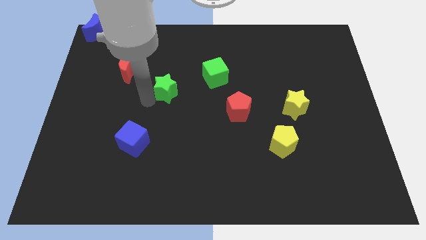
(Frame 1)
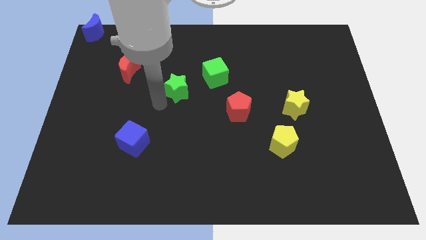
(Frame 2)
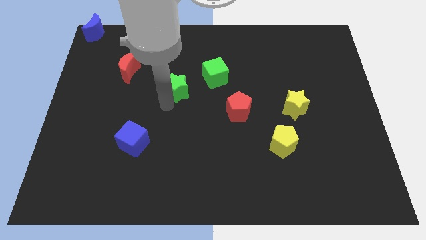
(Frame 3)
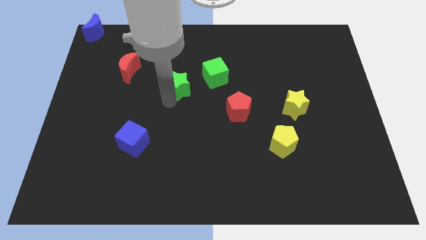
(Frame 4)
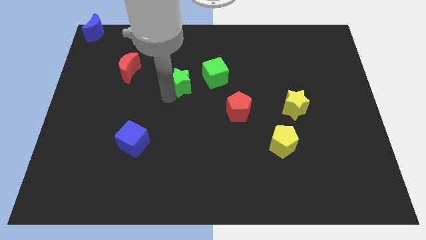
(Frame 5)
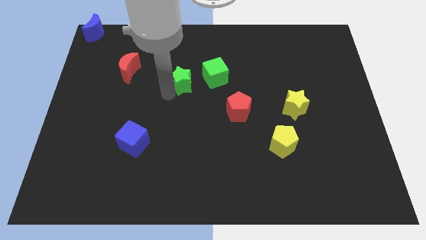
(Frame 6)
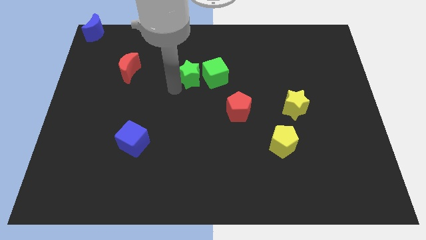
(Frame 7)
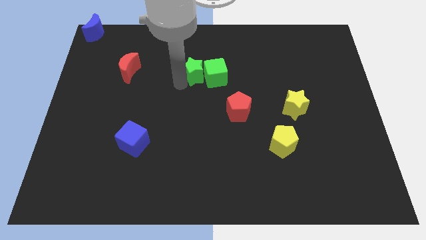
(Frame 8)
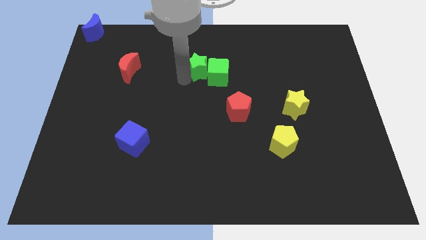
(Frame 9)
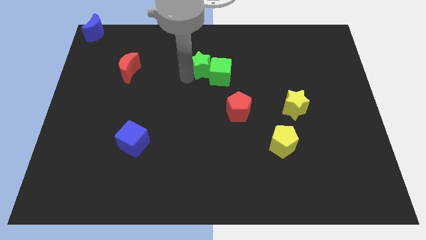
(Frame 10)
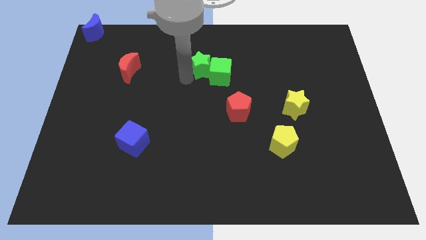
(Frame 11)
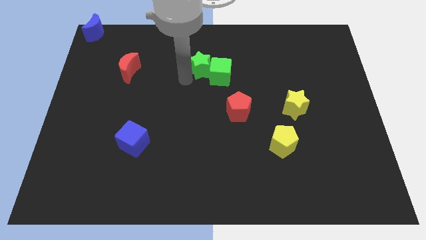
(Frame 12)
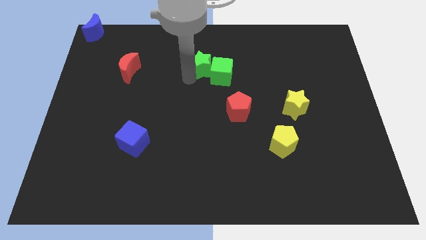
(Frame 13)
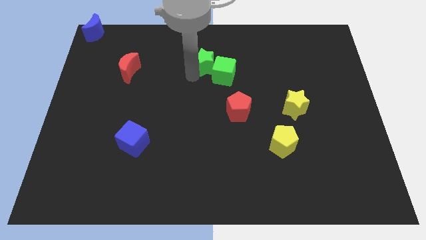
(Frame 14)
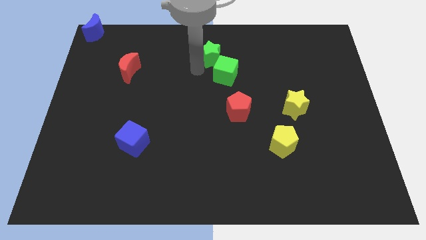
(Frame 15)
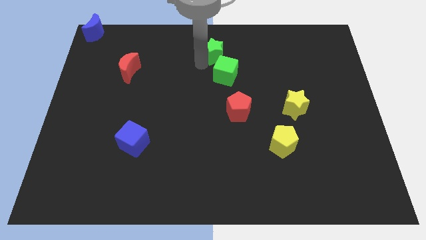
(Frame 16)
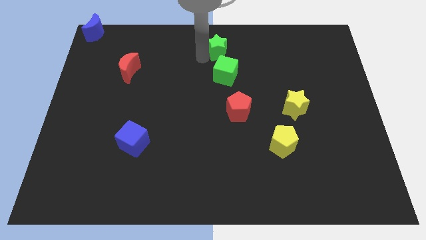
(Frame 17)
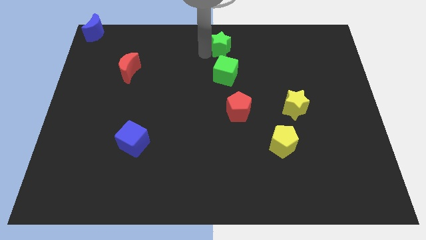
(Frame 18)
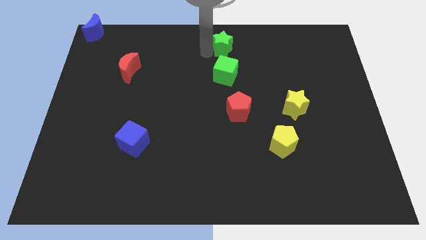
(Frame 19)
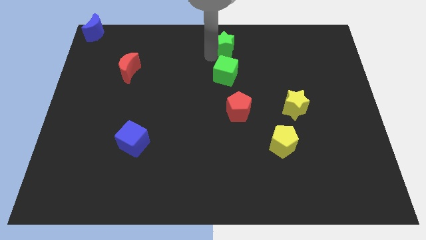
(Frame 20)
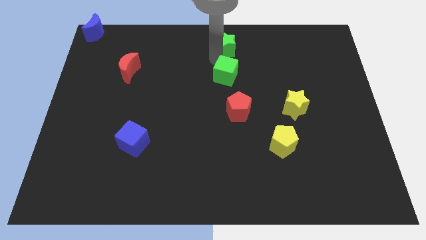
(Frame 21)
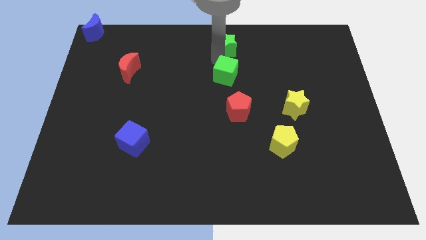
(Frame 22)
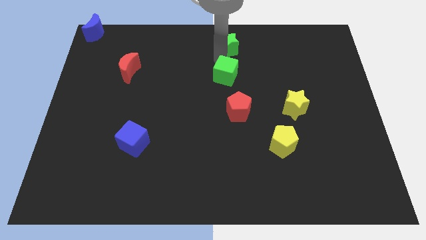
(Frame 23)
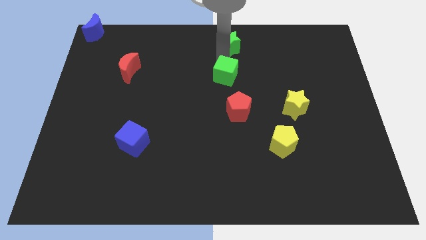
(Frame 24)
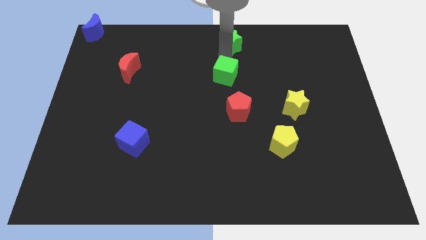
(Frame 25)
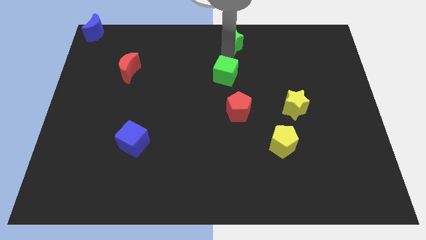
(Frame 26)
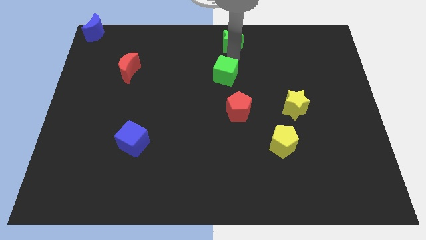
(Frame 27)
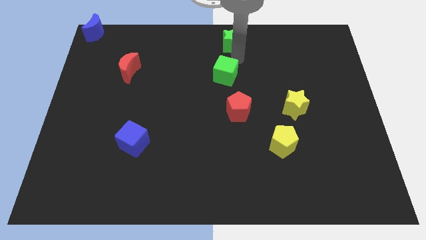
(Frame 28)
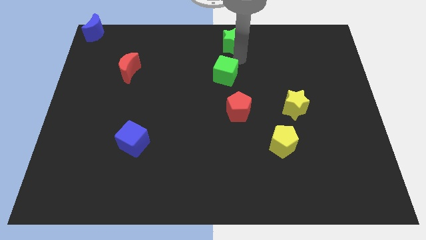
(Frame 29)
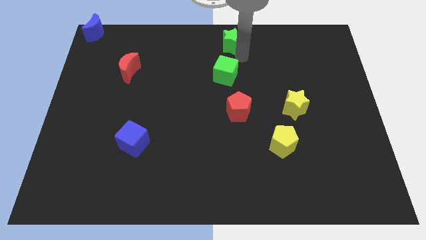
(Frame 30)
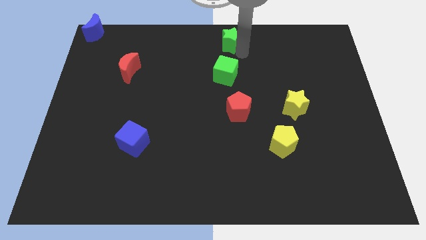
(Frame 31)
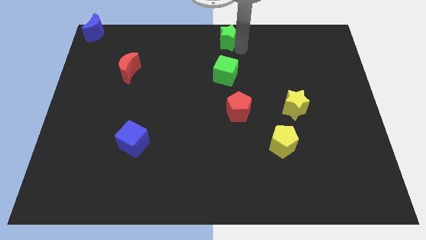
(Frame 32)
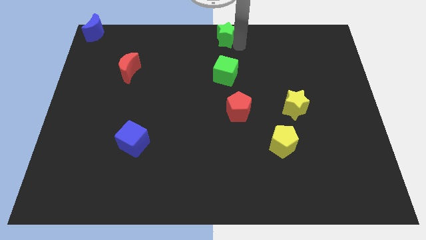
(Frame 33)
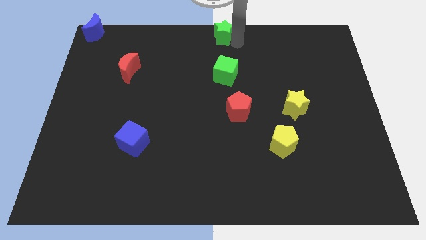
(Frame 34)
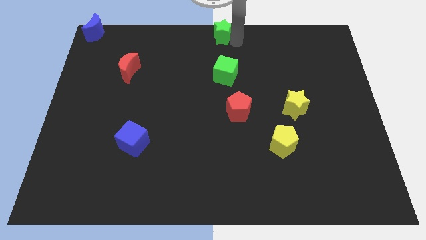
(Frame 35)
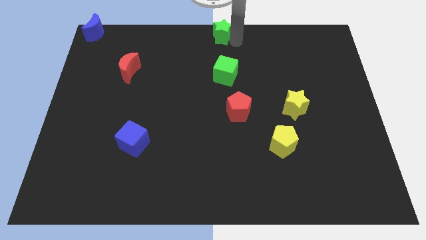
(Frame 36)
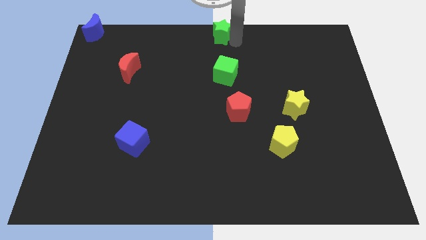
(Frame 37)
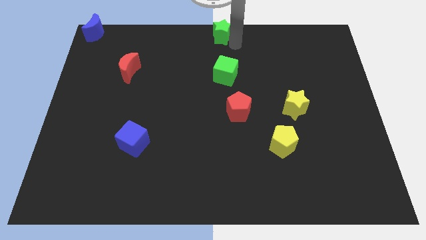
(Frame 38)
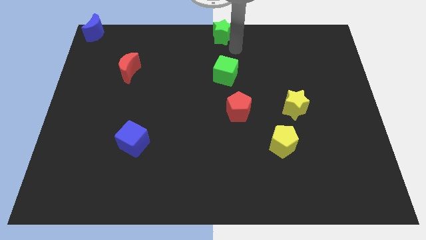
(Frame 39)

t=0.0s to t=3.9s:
place the green star to the top center of the board

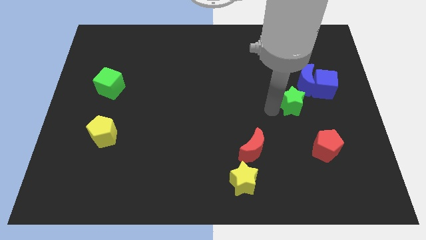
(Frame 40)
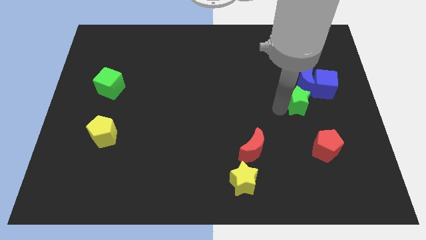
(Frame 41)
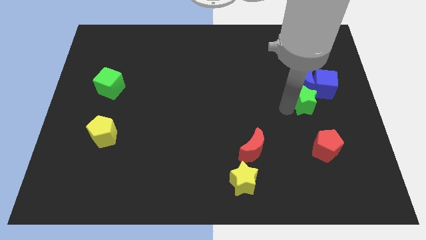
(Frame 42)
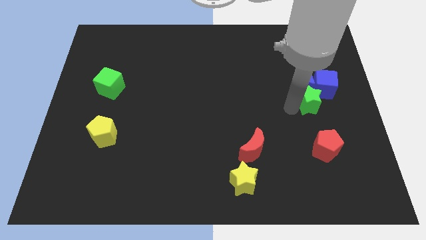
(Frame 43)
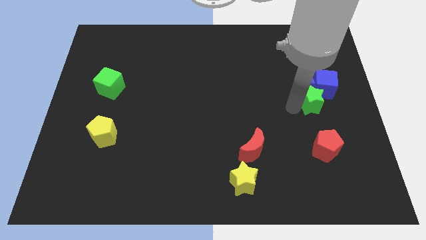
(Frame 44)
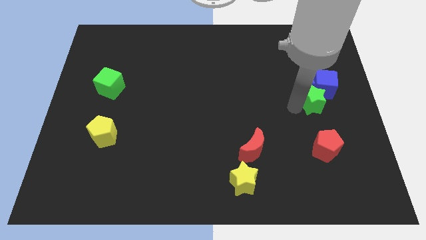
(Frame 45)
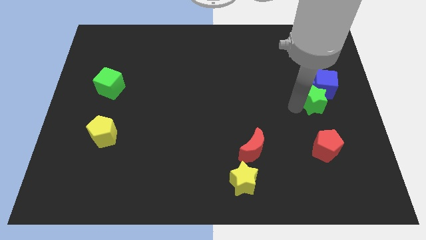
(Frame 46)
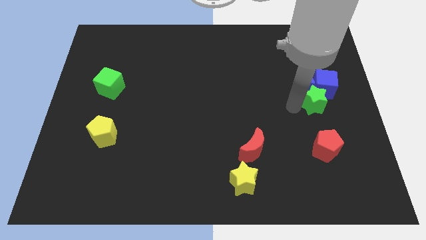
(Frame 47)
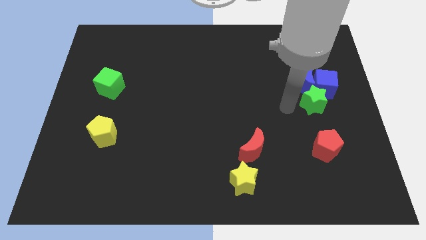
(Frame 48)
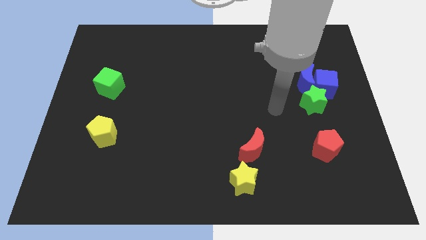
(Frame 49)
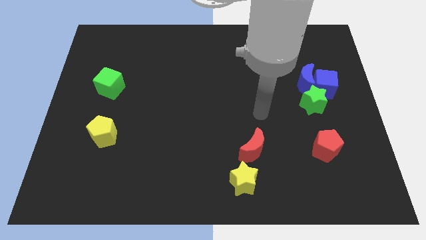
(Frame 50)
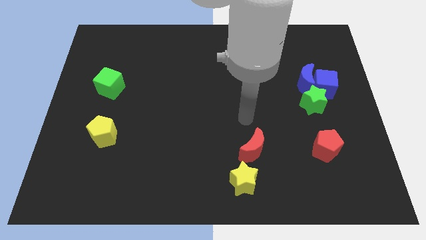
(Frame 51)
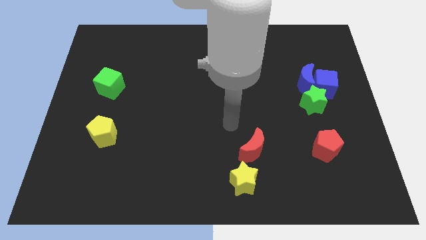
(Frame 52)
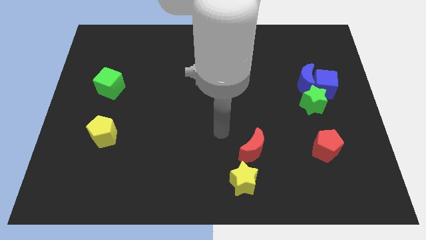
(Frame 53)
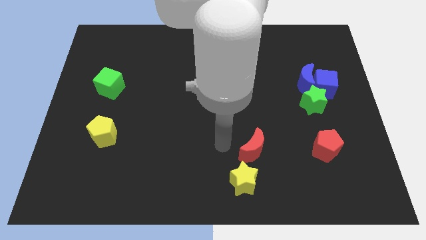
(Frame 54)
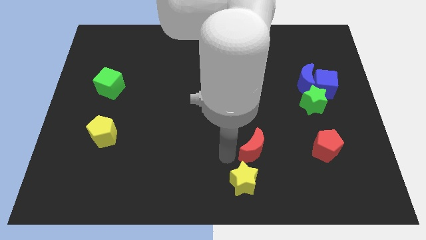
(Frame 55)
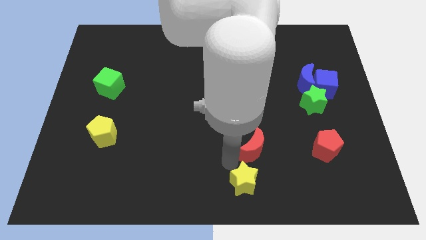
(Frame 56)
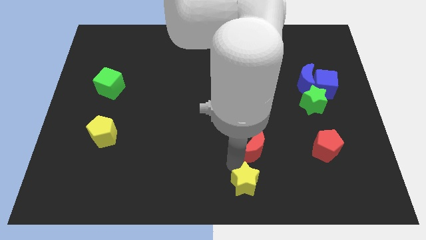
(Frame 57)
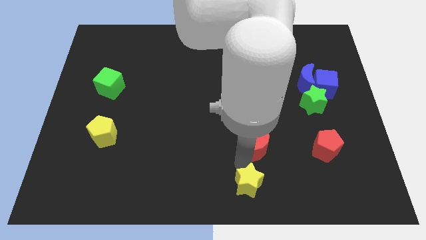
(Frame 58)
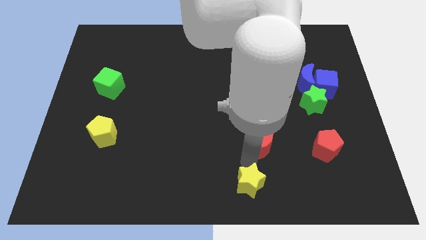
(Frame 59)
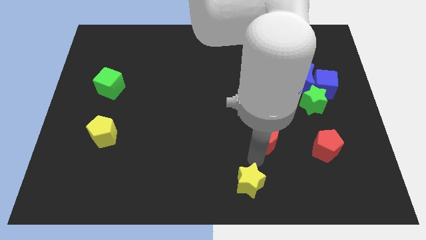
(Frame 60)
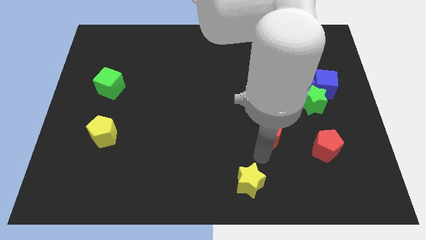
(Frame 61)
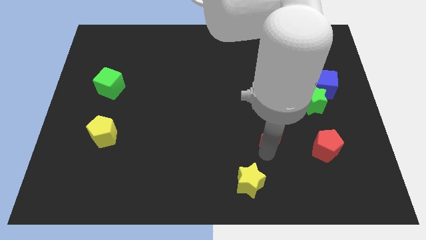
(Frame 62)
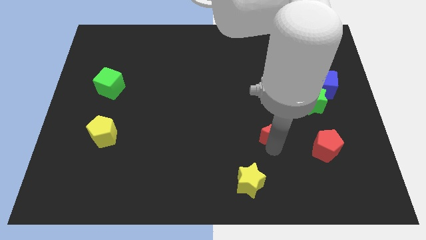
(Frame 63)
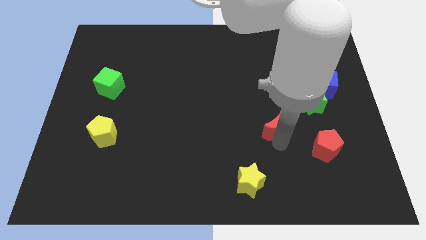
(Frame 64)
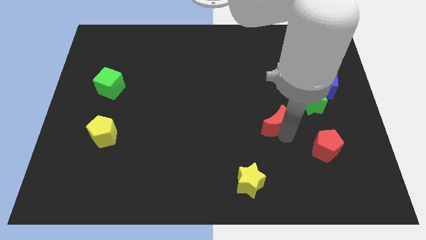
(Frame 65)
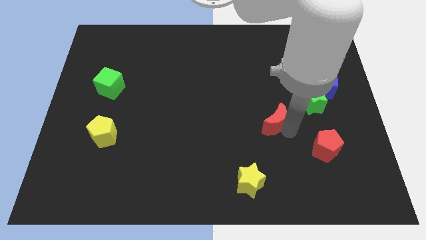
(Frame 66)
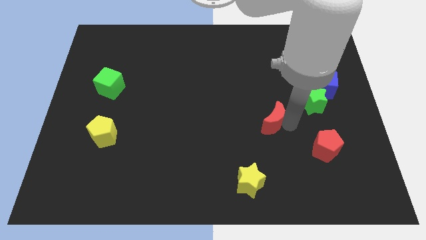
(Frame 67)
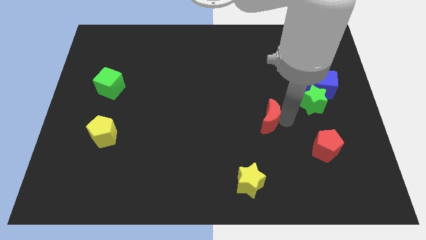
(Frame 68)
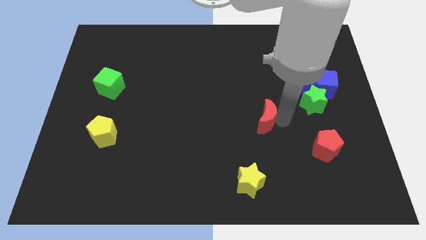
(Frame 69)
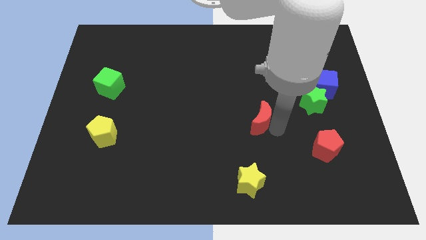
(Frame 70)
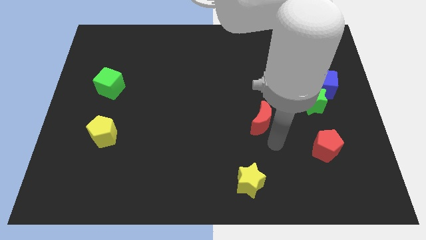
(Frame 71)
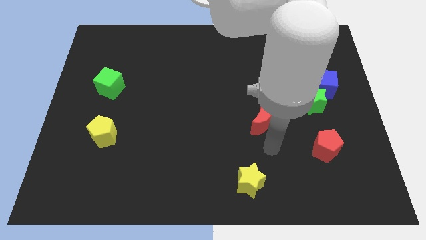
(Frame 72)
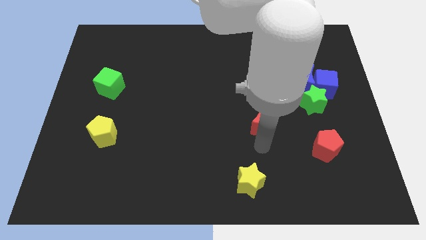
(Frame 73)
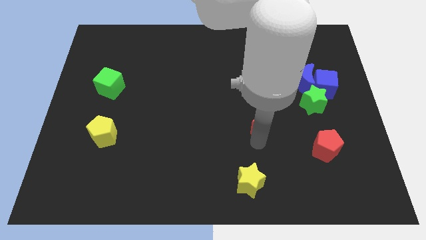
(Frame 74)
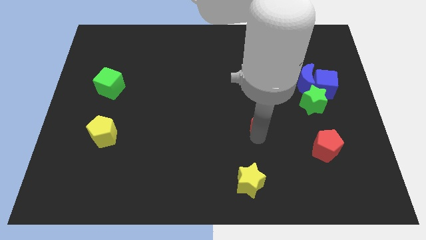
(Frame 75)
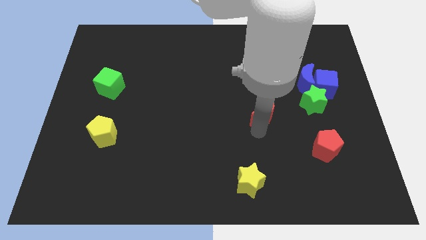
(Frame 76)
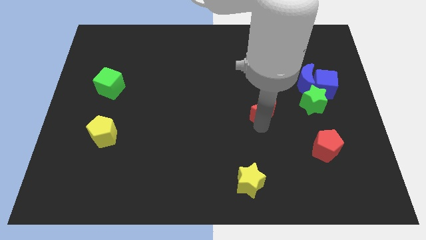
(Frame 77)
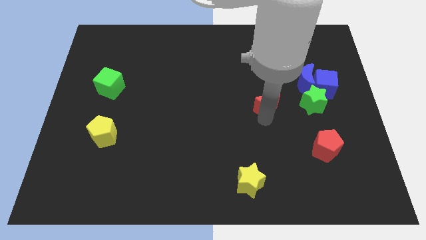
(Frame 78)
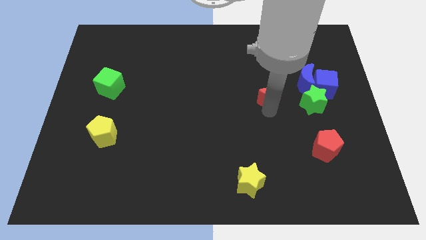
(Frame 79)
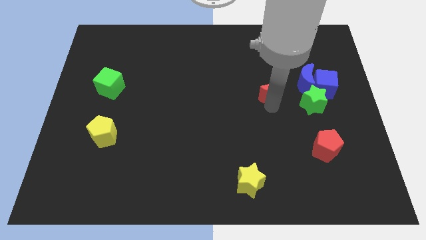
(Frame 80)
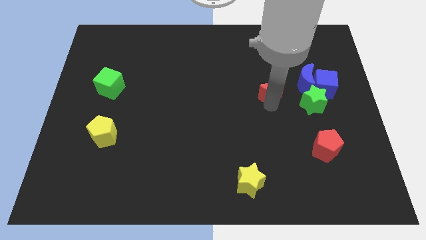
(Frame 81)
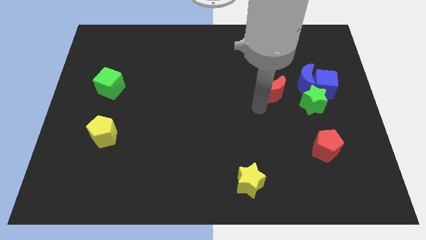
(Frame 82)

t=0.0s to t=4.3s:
push the green star close to the blue blocks

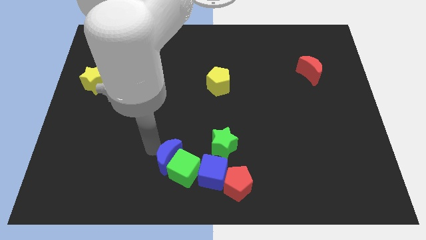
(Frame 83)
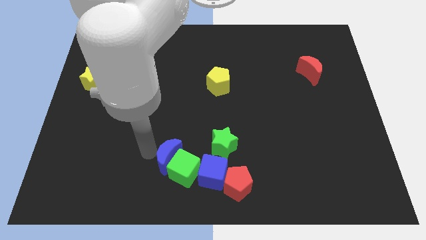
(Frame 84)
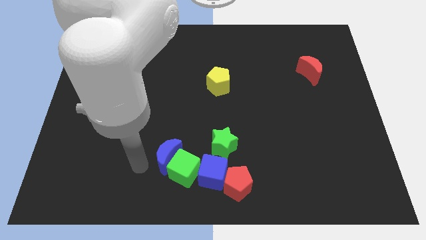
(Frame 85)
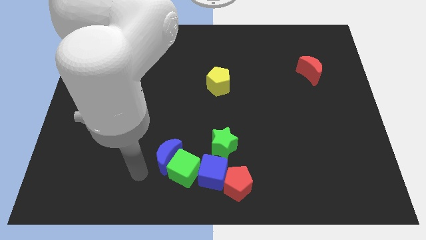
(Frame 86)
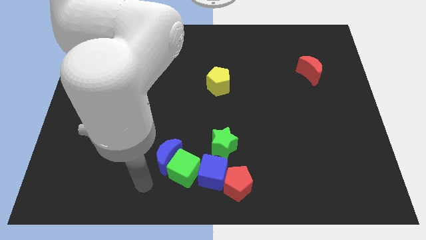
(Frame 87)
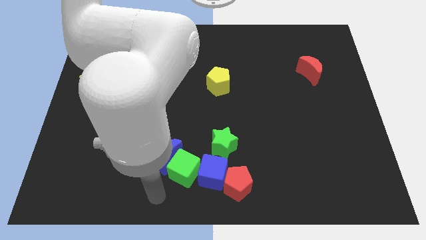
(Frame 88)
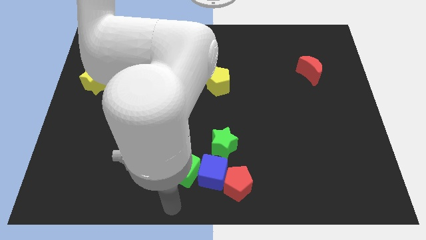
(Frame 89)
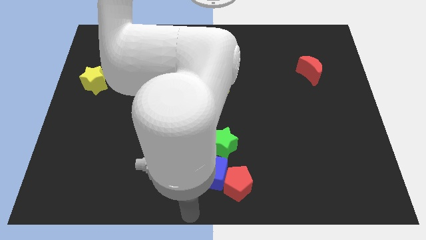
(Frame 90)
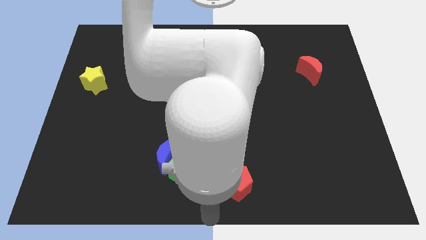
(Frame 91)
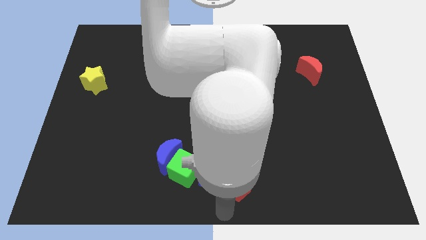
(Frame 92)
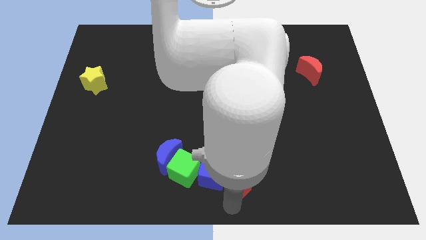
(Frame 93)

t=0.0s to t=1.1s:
go and touch the bottom of the red pentagon

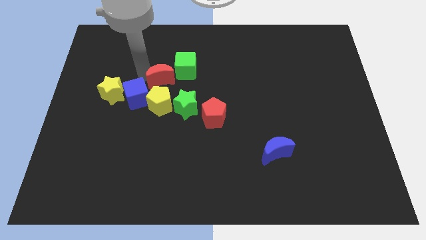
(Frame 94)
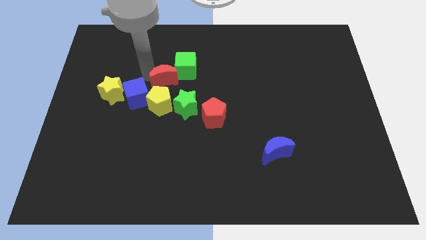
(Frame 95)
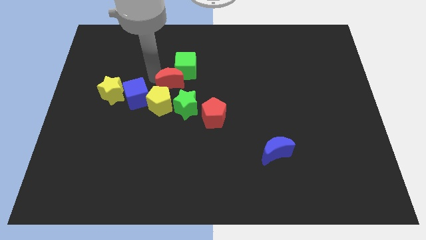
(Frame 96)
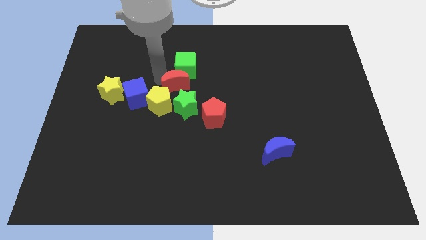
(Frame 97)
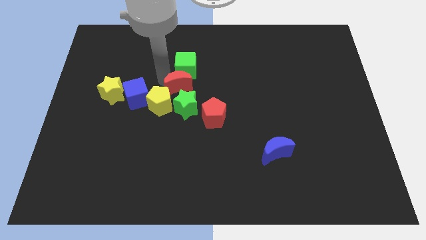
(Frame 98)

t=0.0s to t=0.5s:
place the red crescent below the green cube
